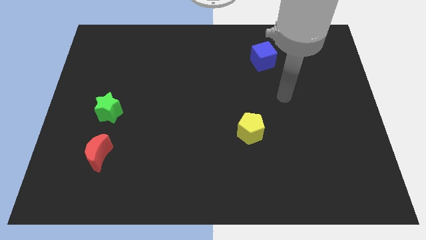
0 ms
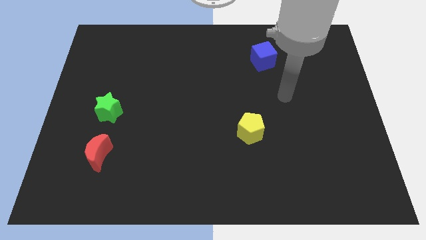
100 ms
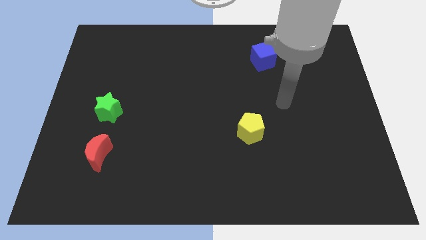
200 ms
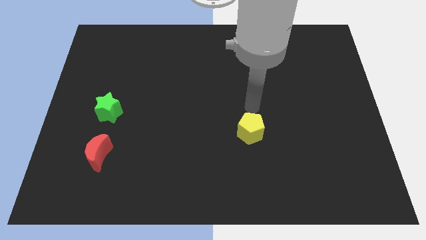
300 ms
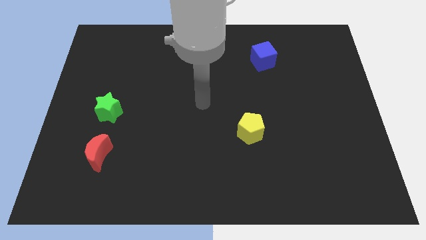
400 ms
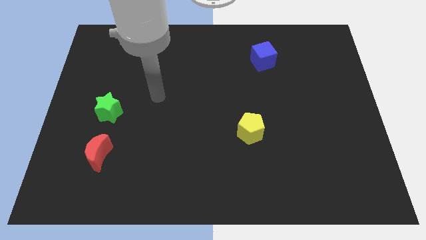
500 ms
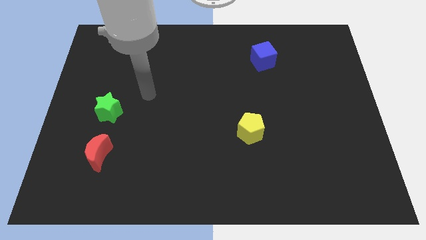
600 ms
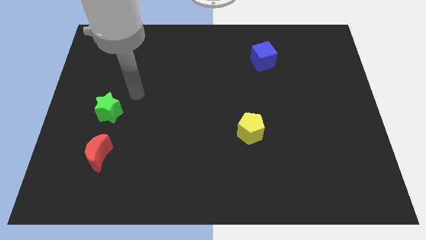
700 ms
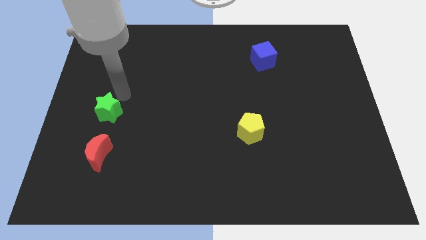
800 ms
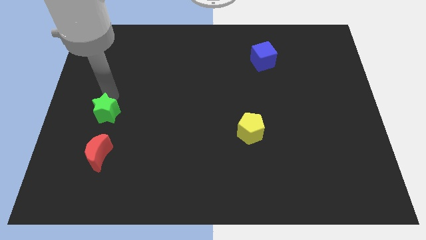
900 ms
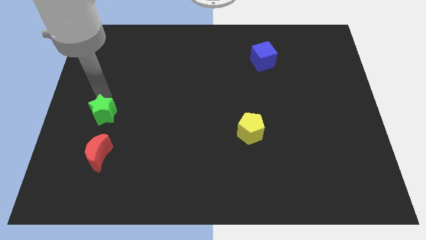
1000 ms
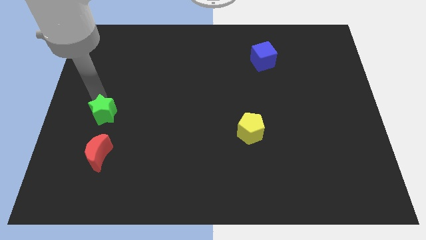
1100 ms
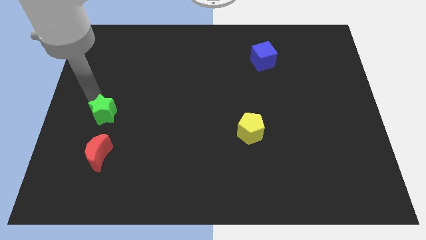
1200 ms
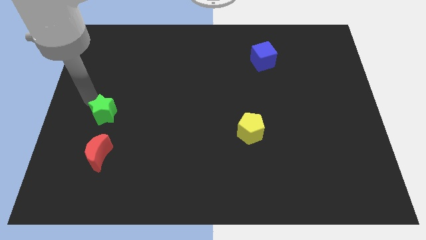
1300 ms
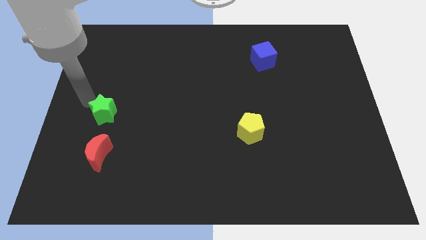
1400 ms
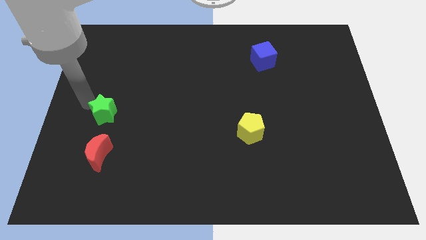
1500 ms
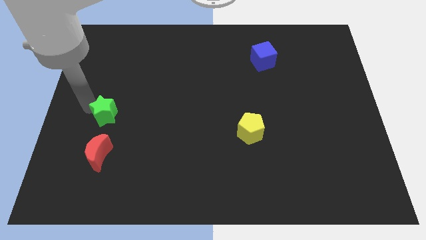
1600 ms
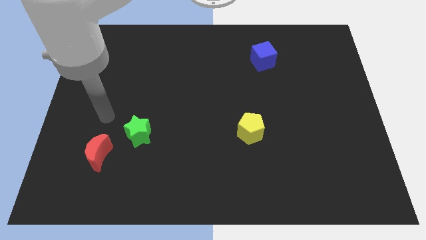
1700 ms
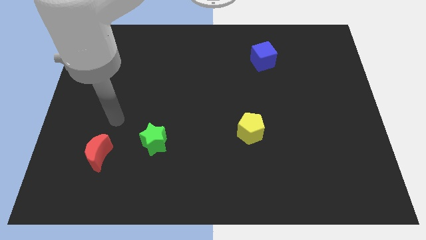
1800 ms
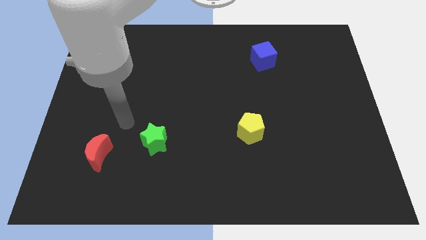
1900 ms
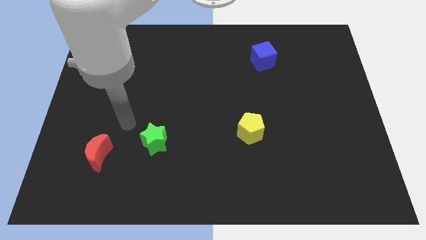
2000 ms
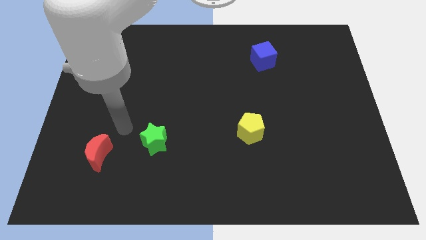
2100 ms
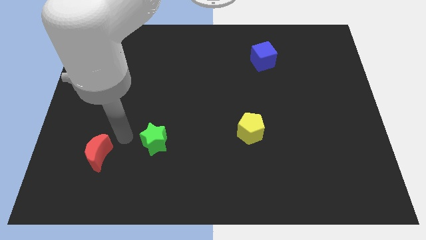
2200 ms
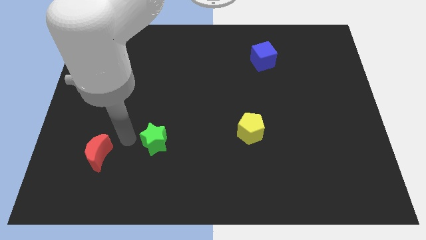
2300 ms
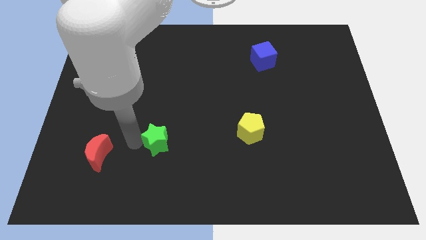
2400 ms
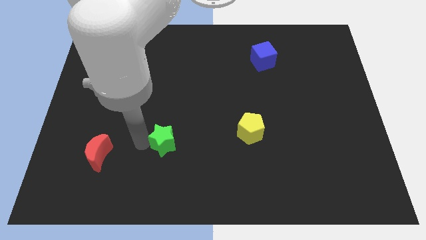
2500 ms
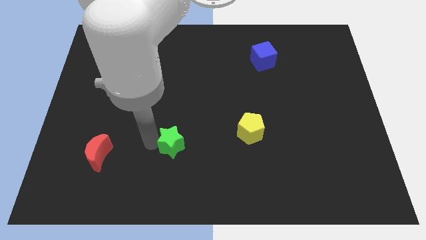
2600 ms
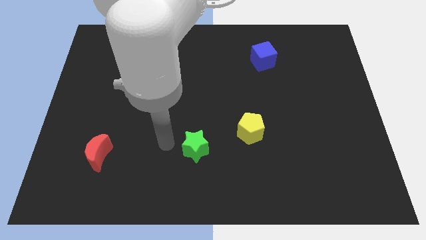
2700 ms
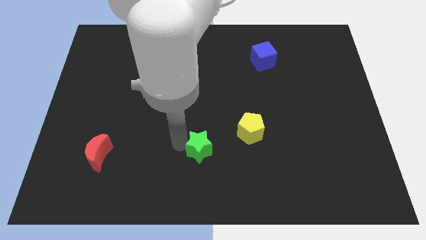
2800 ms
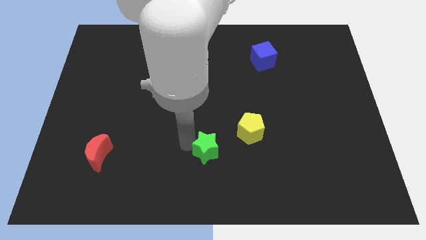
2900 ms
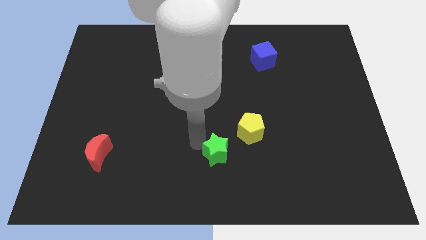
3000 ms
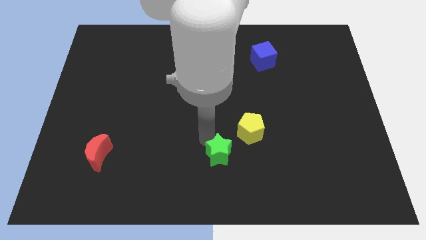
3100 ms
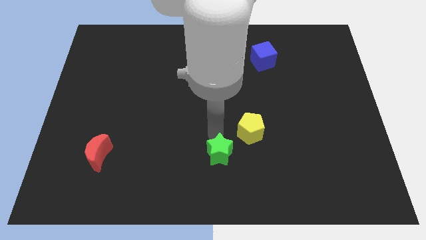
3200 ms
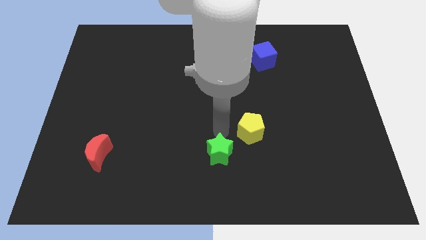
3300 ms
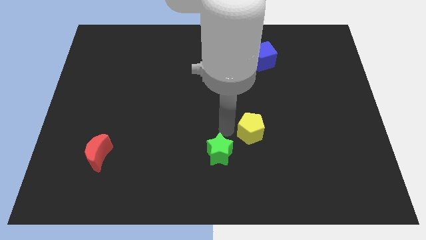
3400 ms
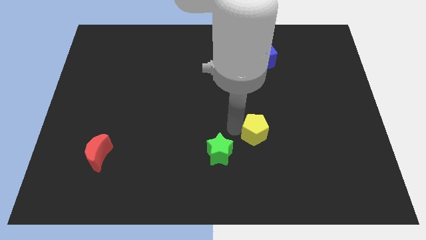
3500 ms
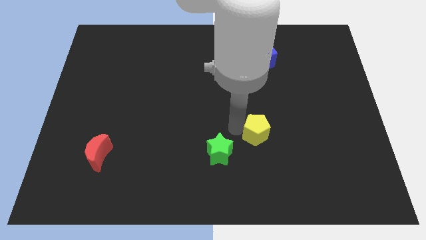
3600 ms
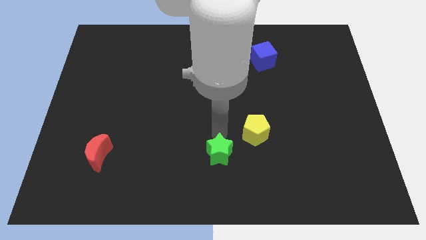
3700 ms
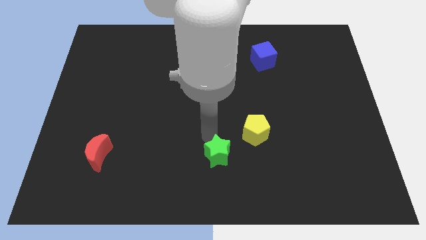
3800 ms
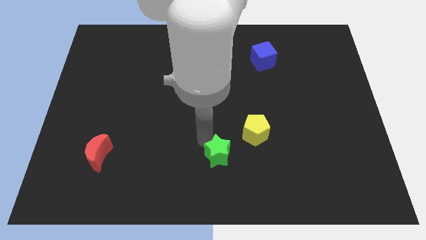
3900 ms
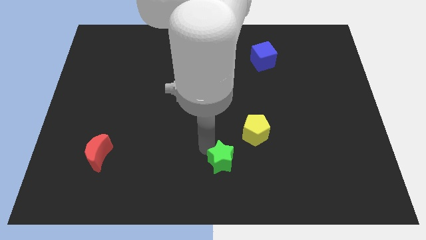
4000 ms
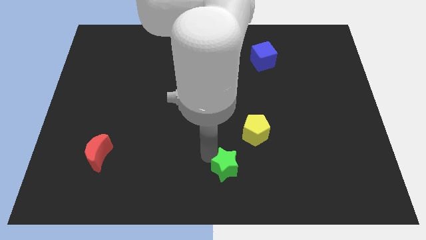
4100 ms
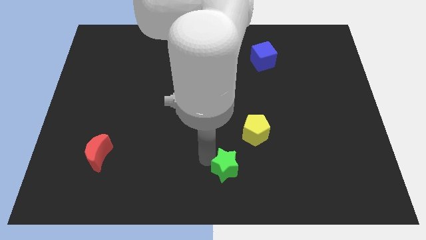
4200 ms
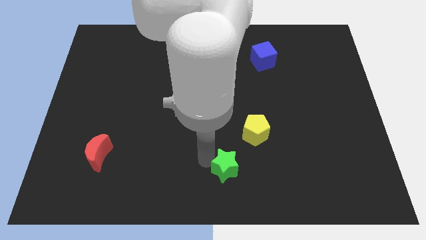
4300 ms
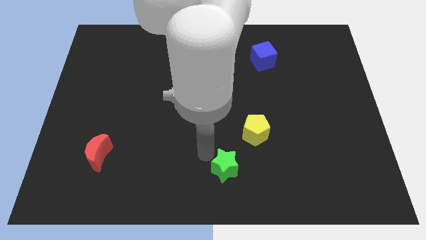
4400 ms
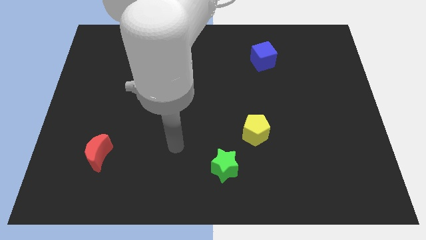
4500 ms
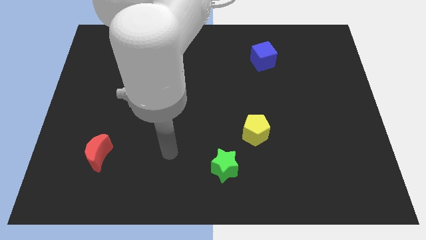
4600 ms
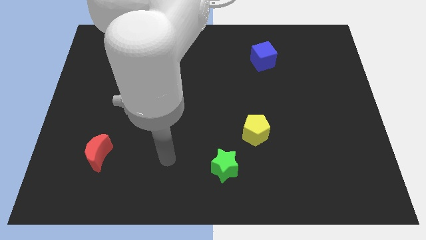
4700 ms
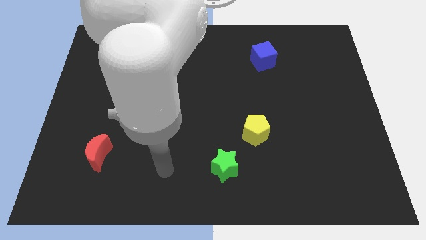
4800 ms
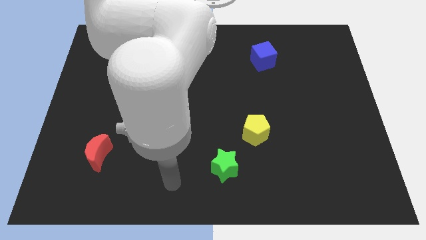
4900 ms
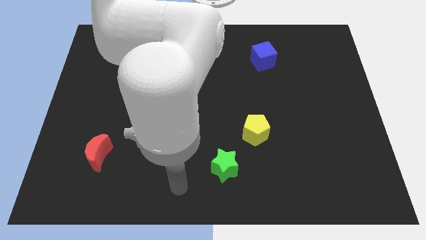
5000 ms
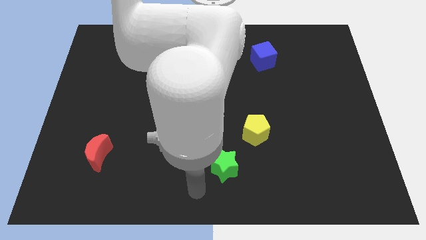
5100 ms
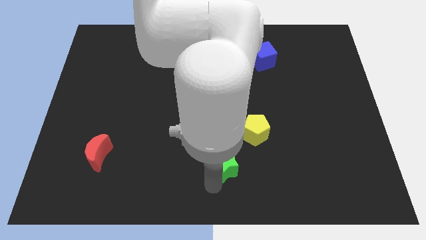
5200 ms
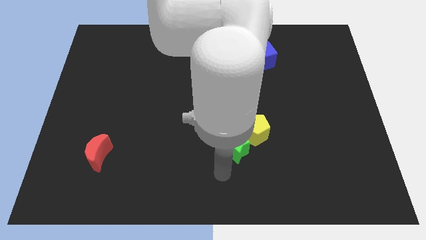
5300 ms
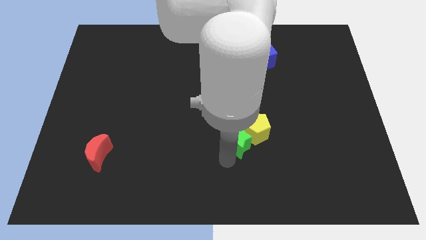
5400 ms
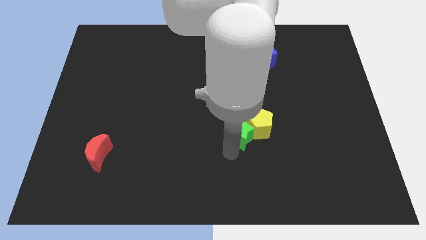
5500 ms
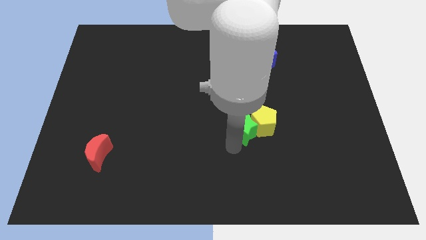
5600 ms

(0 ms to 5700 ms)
move the green star towards the pentagon

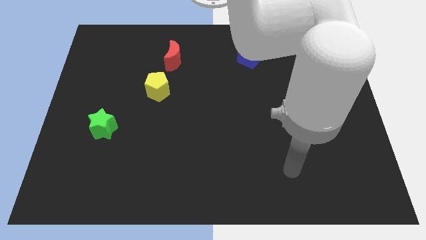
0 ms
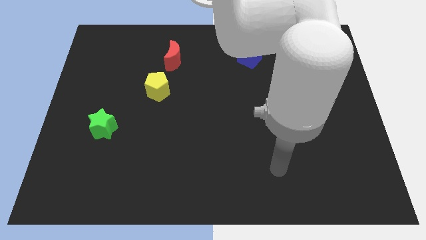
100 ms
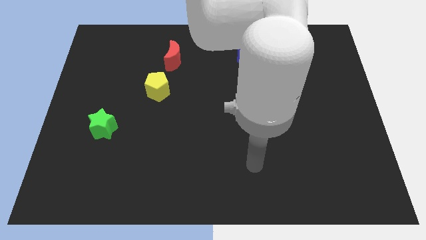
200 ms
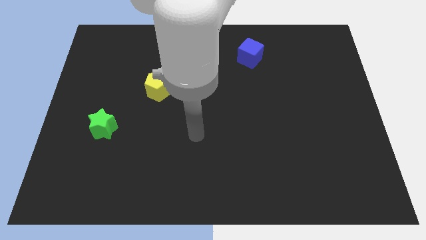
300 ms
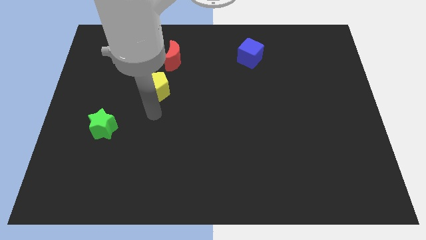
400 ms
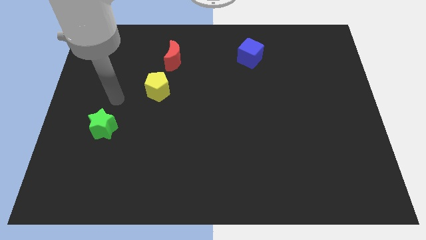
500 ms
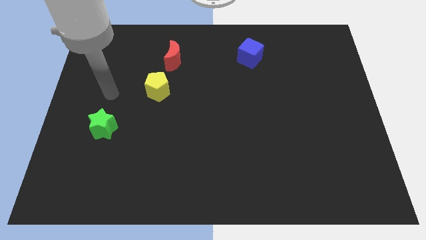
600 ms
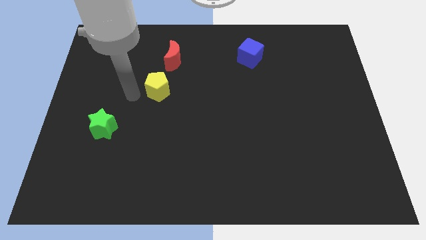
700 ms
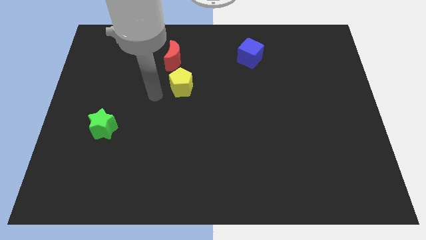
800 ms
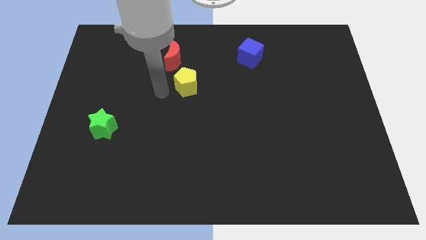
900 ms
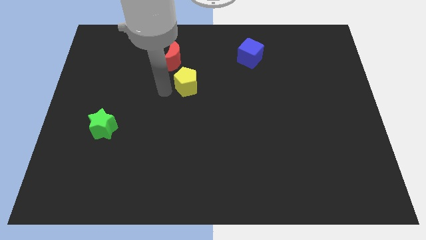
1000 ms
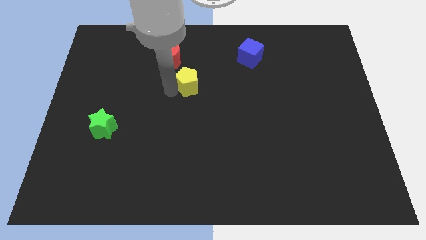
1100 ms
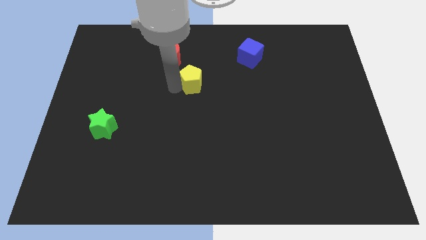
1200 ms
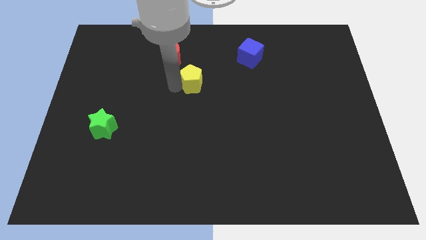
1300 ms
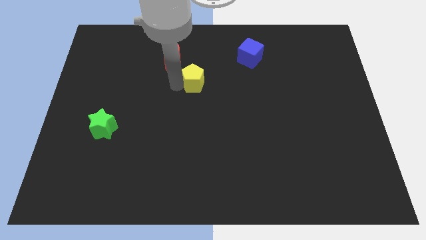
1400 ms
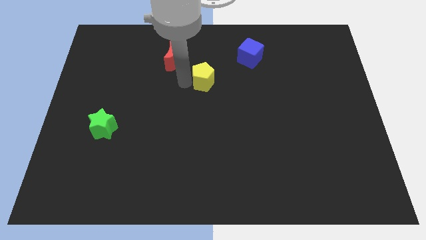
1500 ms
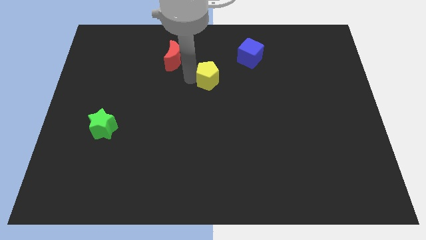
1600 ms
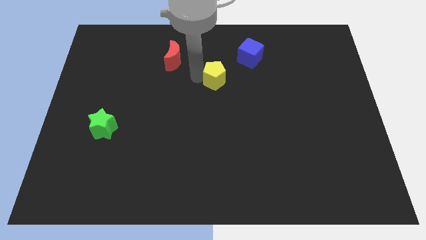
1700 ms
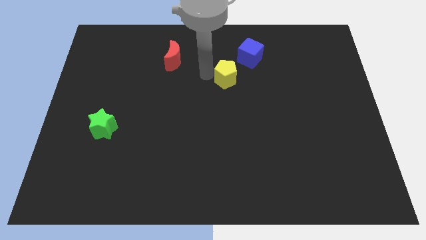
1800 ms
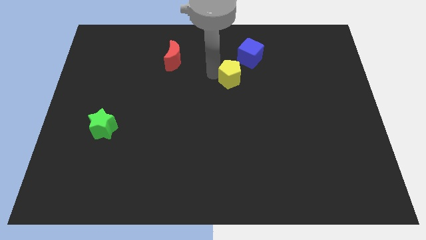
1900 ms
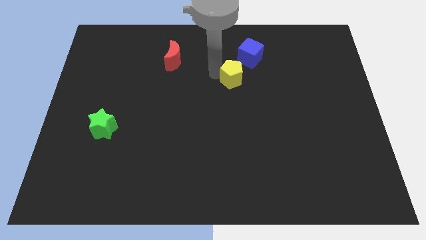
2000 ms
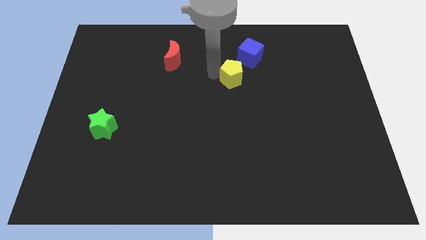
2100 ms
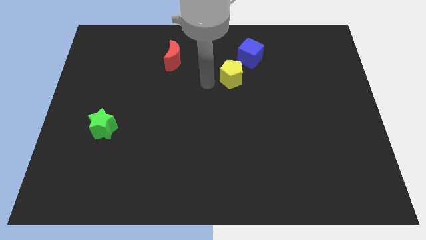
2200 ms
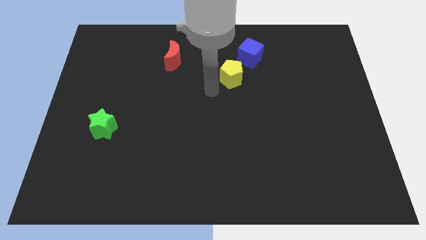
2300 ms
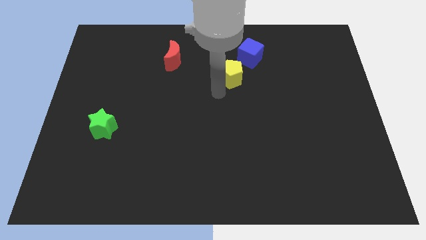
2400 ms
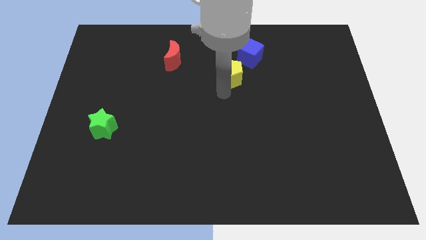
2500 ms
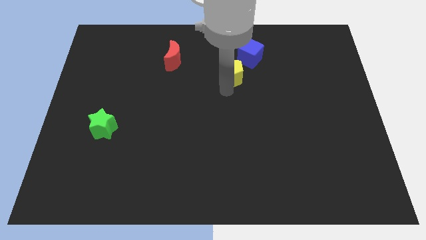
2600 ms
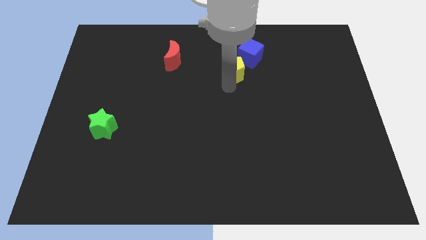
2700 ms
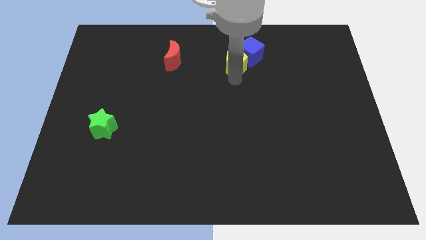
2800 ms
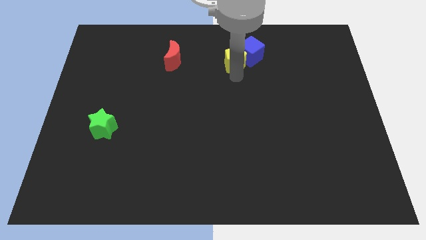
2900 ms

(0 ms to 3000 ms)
put the yellow block towards the blue block
